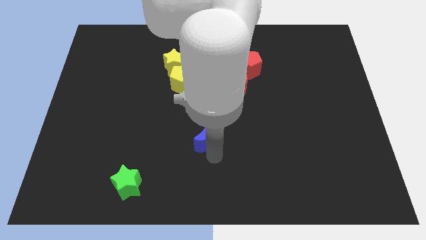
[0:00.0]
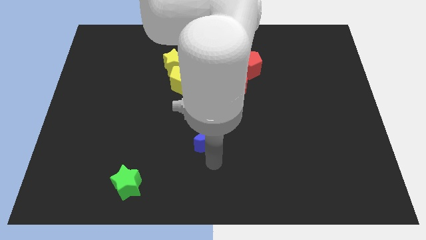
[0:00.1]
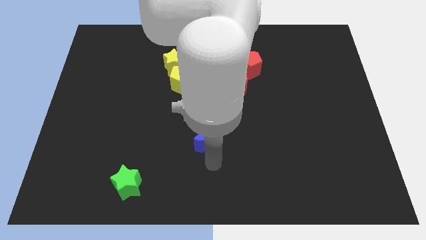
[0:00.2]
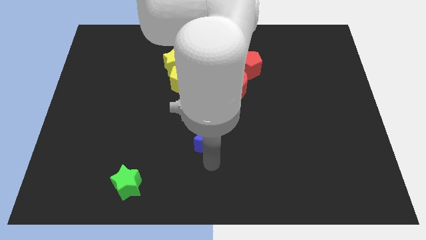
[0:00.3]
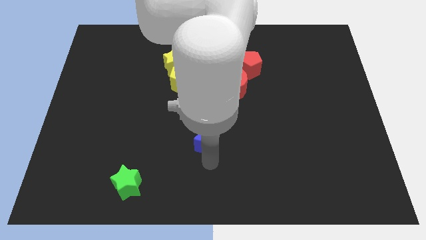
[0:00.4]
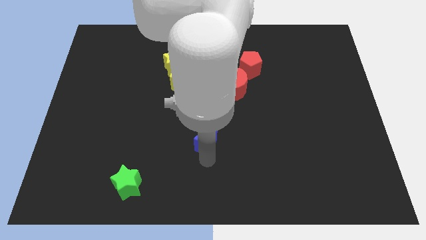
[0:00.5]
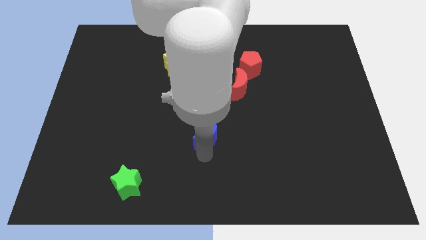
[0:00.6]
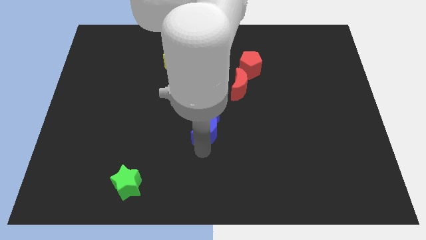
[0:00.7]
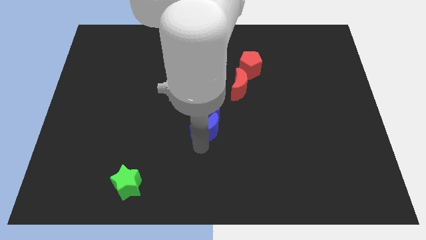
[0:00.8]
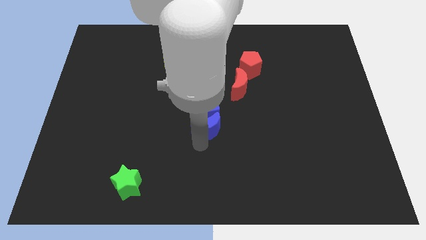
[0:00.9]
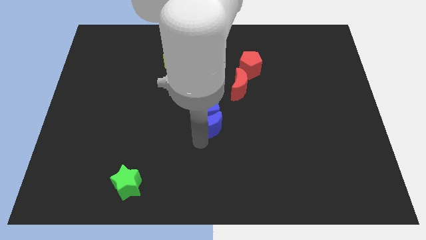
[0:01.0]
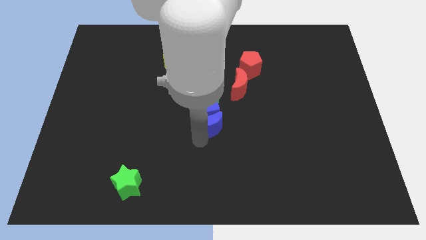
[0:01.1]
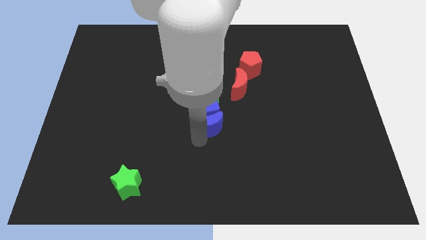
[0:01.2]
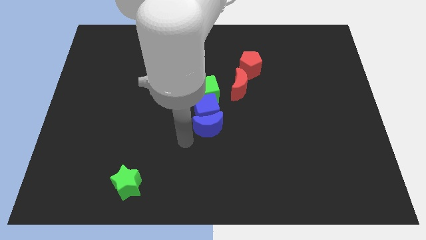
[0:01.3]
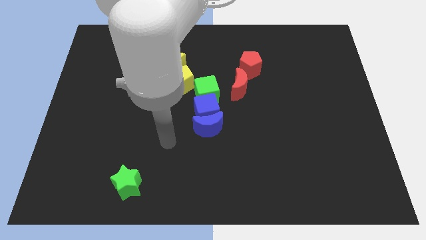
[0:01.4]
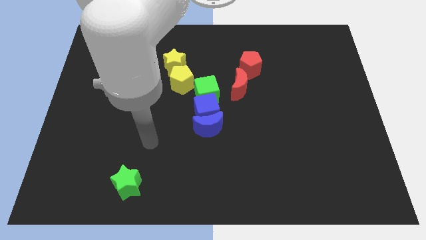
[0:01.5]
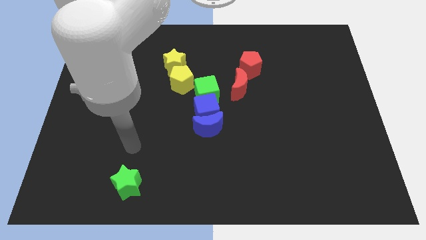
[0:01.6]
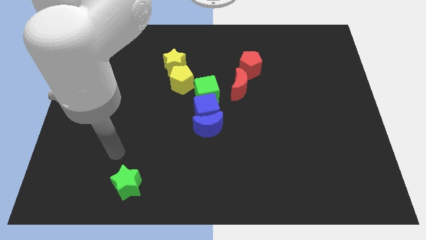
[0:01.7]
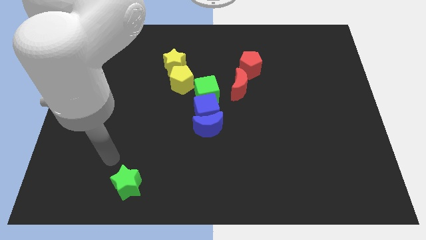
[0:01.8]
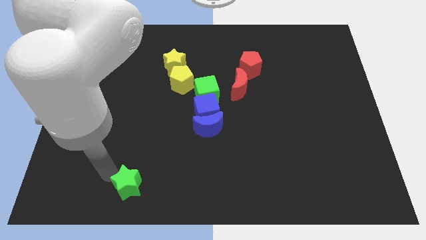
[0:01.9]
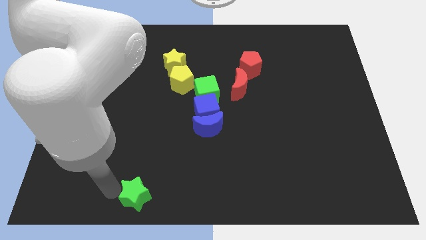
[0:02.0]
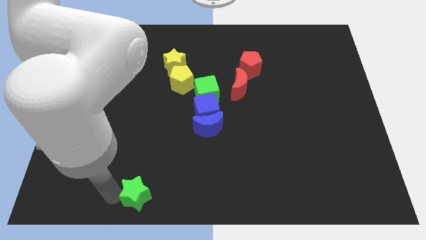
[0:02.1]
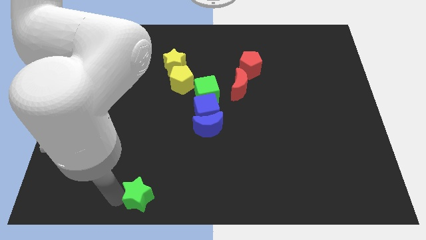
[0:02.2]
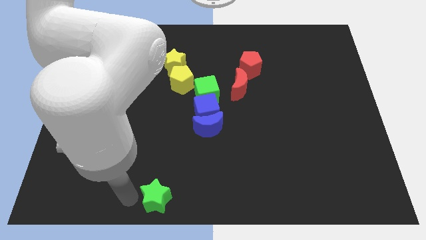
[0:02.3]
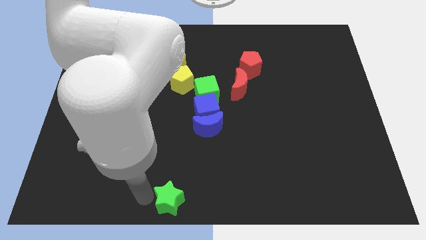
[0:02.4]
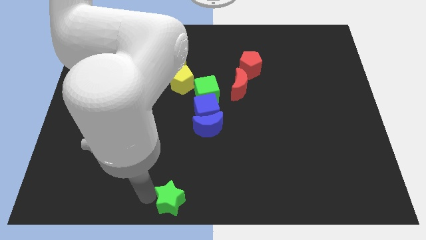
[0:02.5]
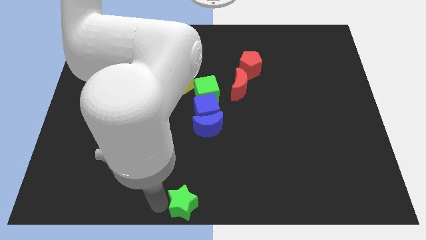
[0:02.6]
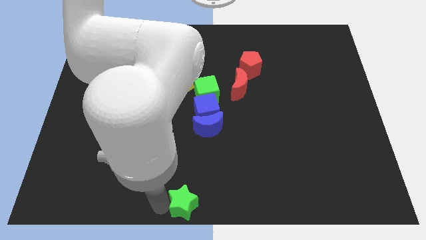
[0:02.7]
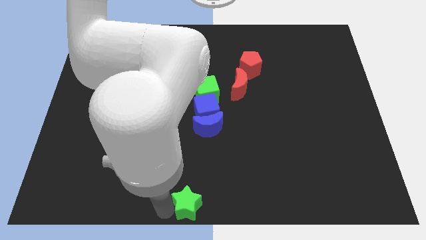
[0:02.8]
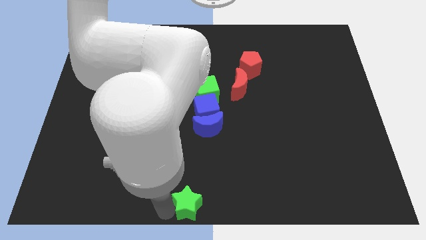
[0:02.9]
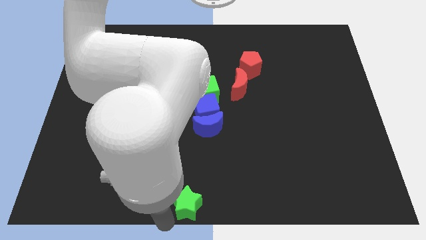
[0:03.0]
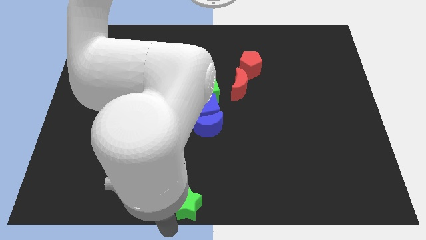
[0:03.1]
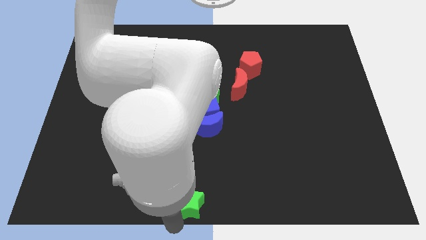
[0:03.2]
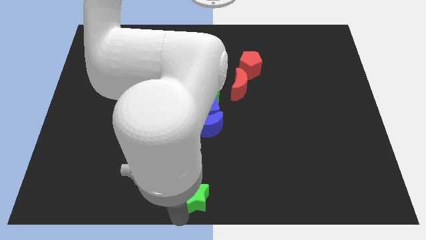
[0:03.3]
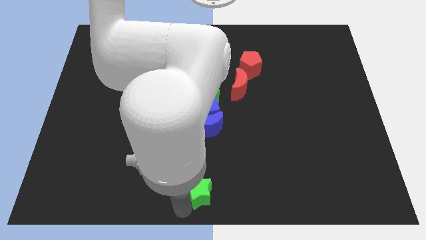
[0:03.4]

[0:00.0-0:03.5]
place the green star at the boottom center

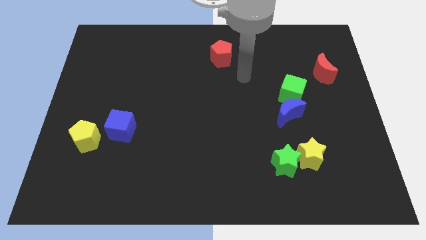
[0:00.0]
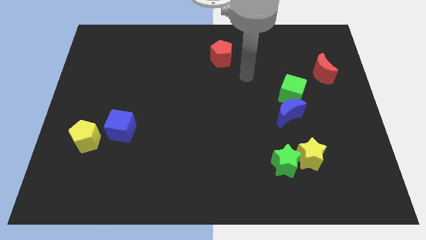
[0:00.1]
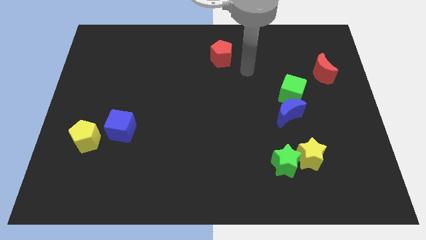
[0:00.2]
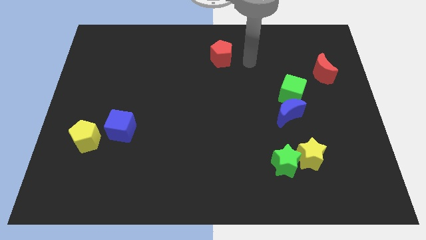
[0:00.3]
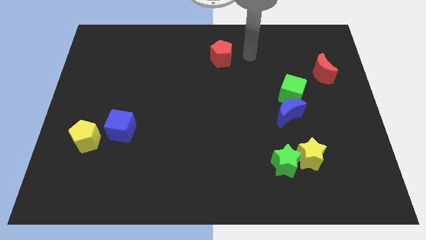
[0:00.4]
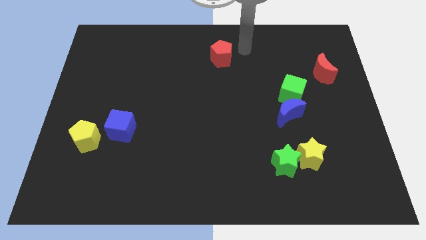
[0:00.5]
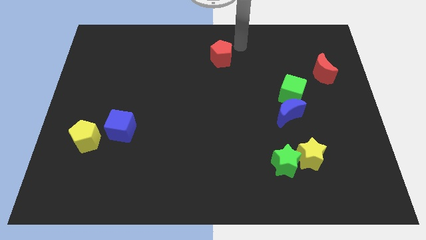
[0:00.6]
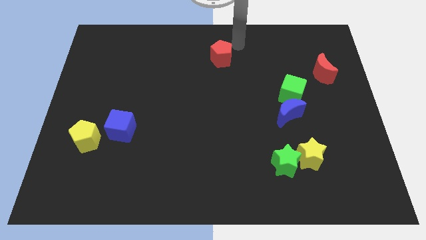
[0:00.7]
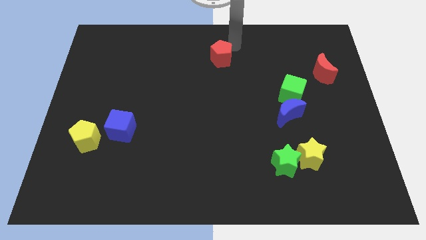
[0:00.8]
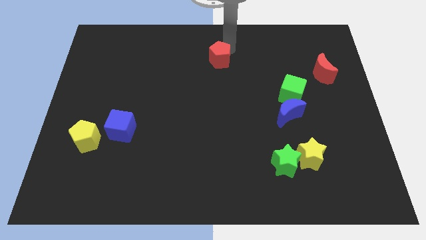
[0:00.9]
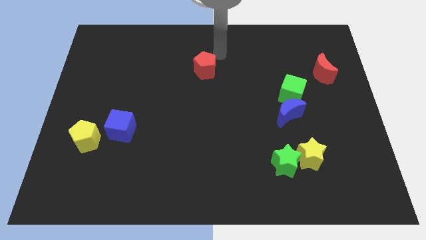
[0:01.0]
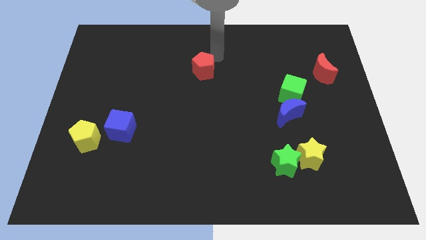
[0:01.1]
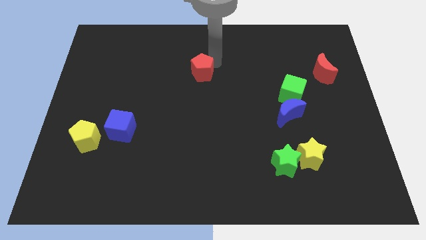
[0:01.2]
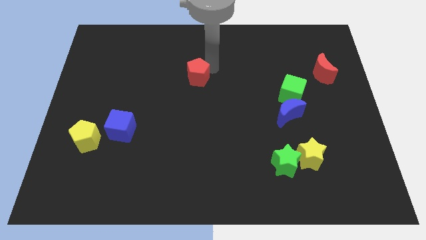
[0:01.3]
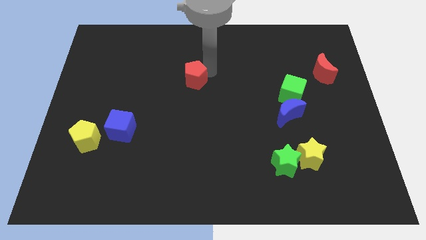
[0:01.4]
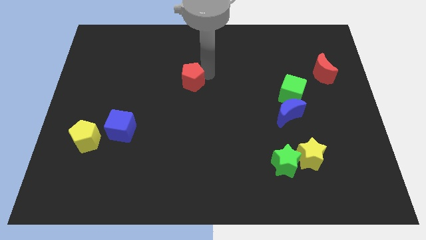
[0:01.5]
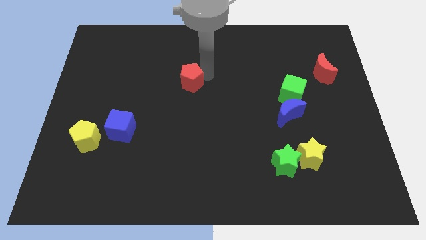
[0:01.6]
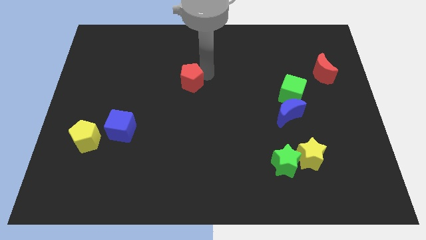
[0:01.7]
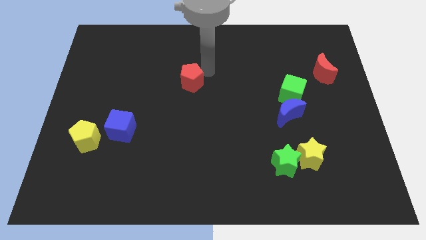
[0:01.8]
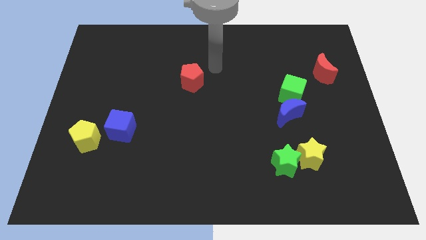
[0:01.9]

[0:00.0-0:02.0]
push the red pentagon towards the center

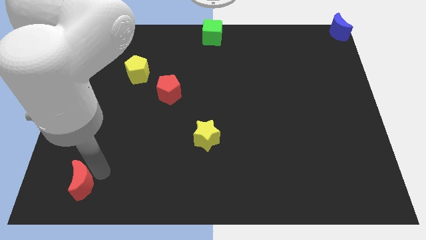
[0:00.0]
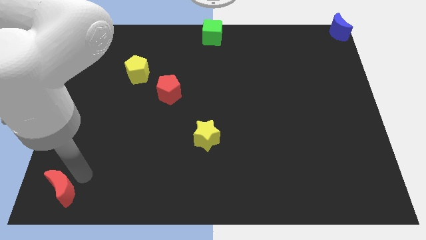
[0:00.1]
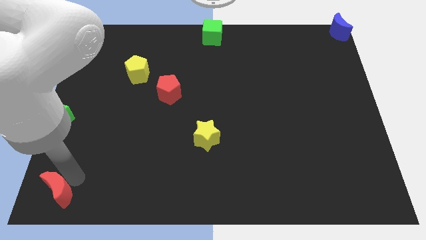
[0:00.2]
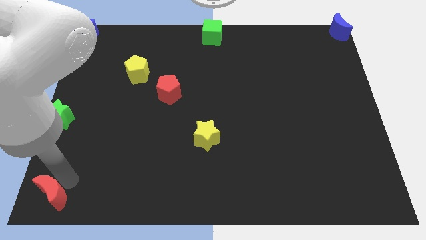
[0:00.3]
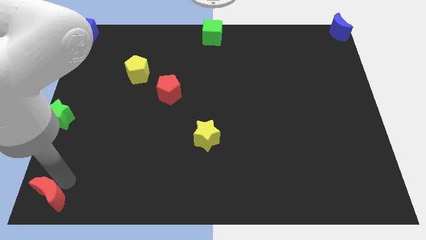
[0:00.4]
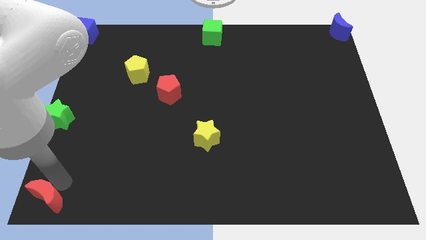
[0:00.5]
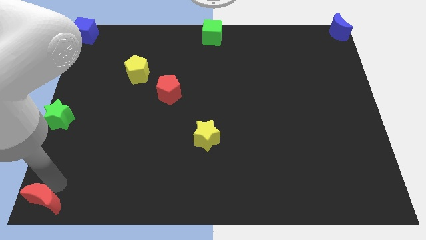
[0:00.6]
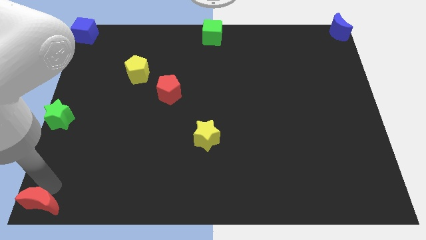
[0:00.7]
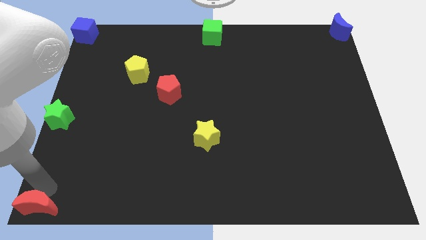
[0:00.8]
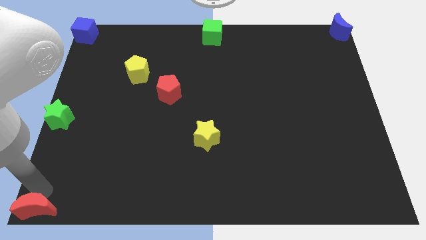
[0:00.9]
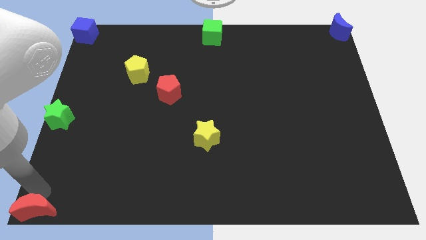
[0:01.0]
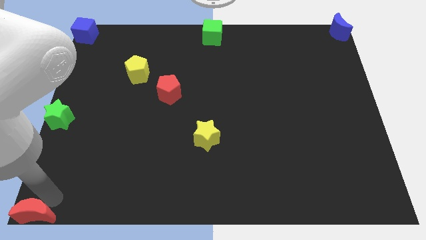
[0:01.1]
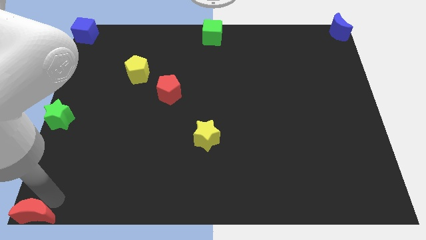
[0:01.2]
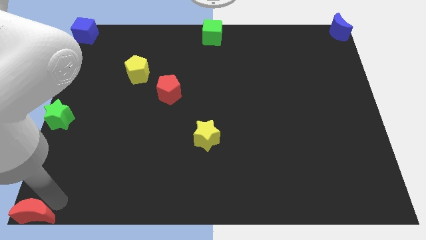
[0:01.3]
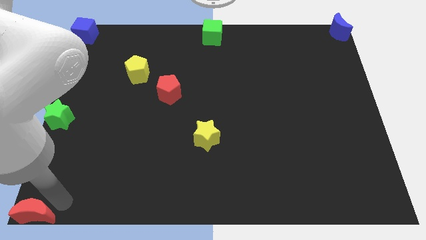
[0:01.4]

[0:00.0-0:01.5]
push the red crescent to the bottom left corner of the board

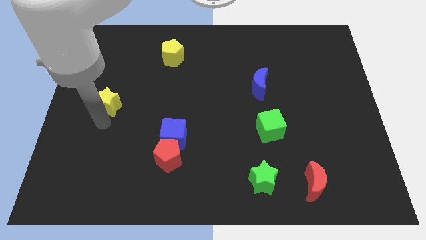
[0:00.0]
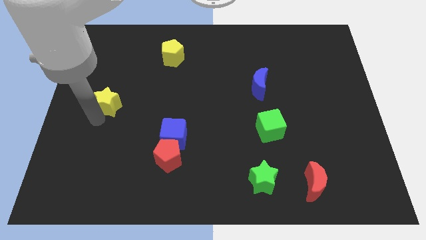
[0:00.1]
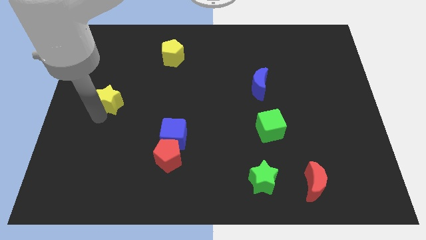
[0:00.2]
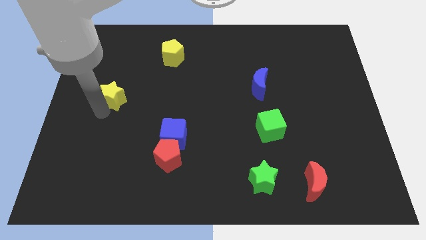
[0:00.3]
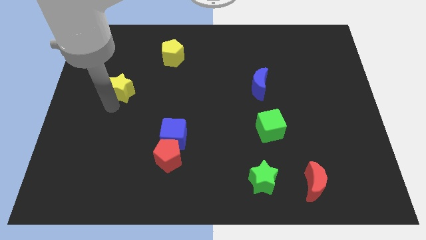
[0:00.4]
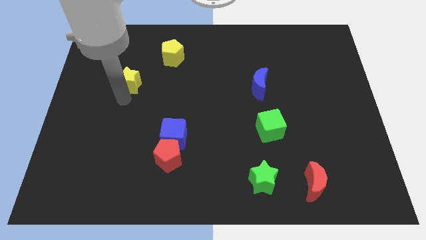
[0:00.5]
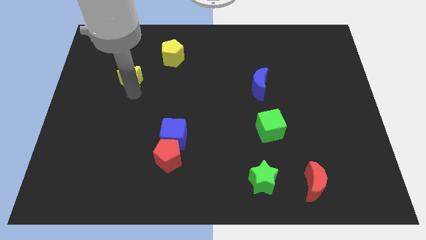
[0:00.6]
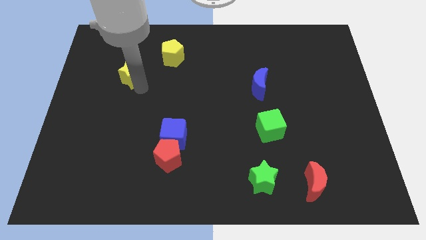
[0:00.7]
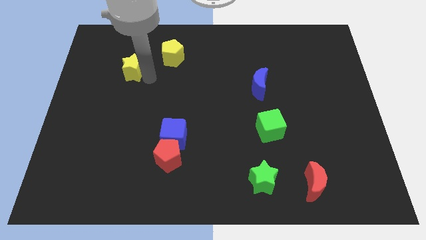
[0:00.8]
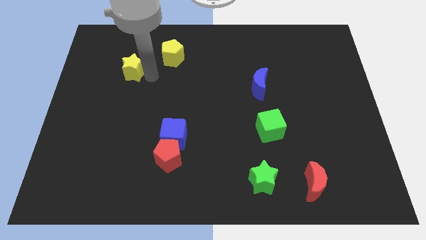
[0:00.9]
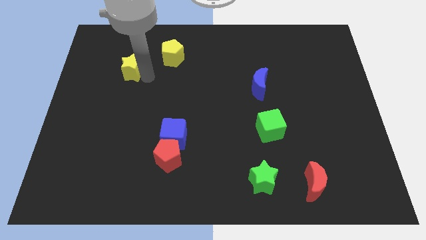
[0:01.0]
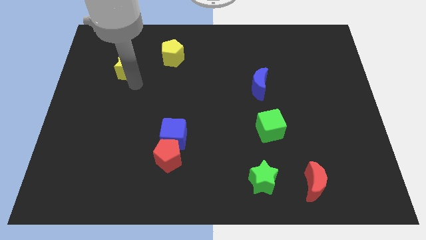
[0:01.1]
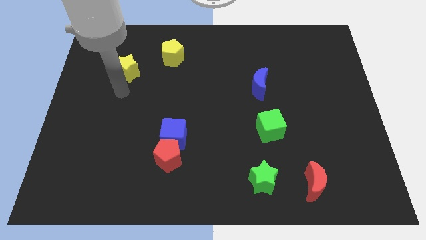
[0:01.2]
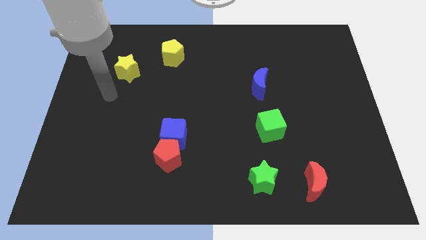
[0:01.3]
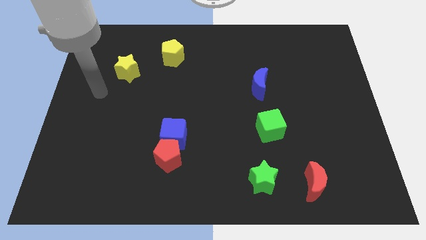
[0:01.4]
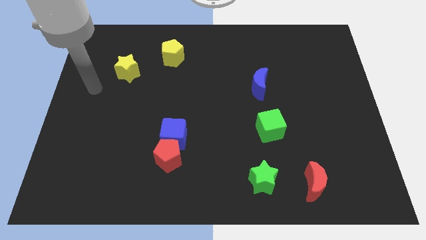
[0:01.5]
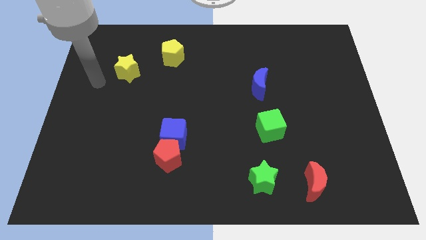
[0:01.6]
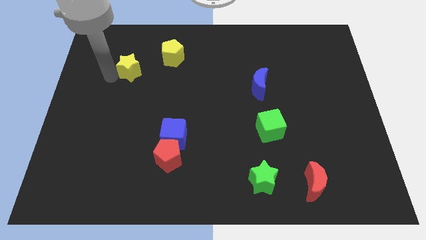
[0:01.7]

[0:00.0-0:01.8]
move the yellow star towards the yellow pentagon
